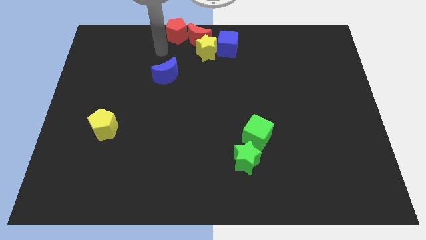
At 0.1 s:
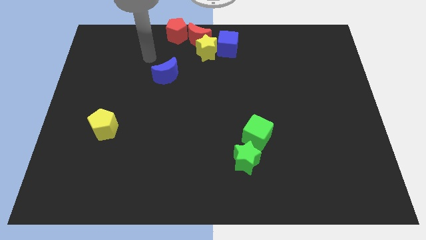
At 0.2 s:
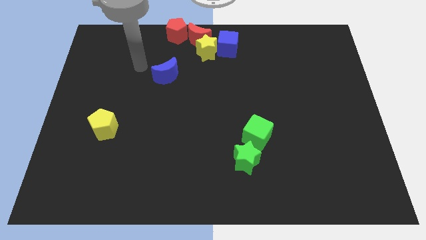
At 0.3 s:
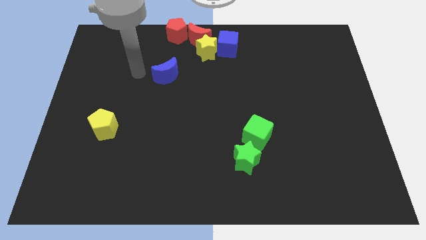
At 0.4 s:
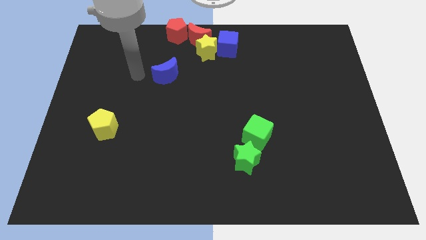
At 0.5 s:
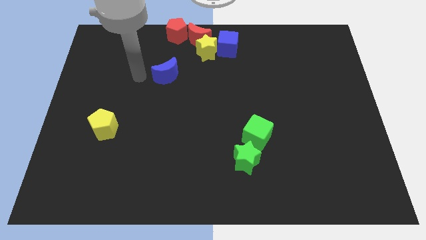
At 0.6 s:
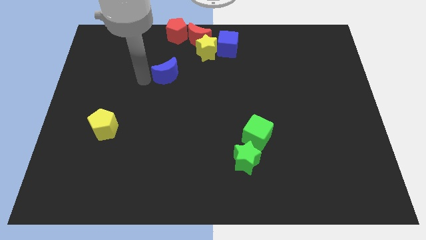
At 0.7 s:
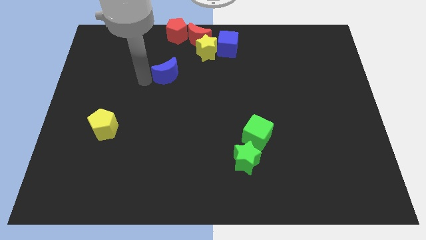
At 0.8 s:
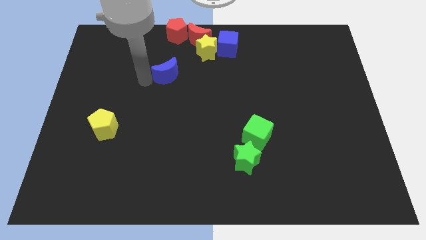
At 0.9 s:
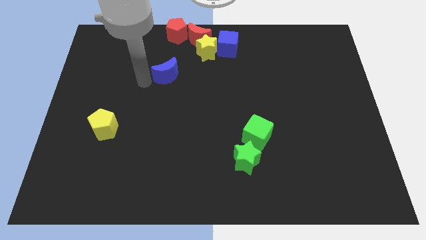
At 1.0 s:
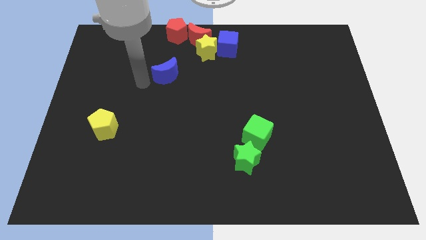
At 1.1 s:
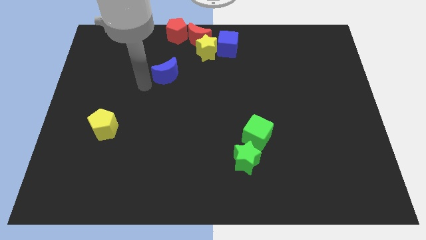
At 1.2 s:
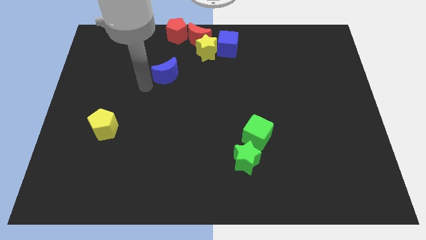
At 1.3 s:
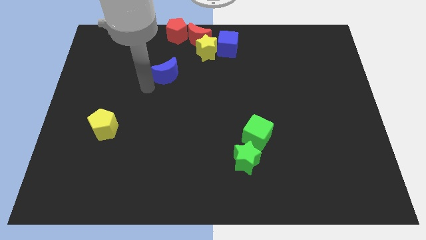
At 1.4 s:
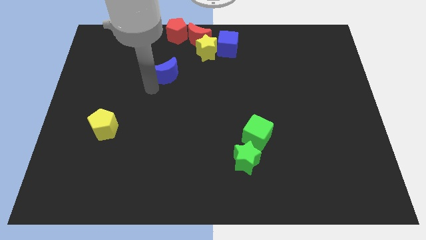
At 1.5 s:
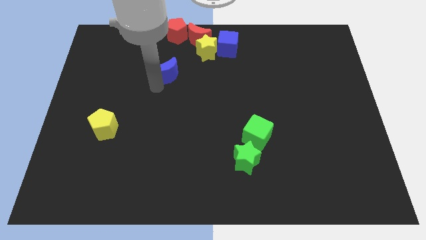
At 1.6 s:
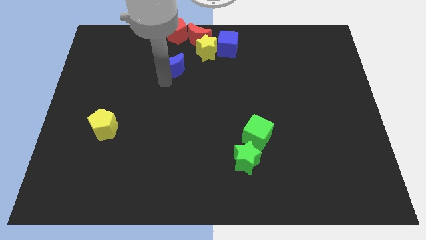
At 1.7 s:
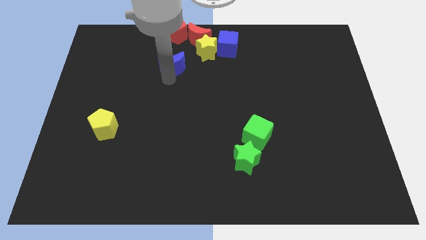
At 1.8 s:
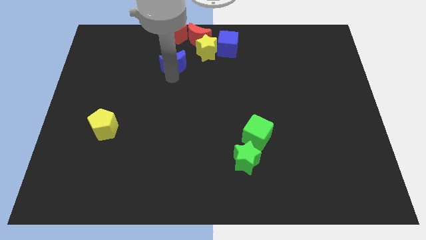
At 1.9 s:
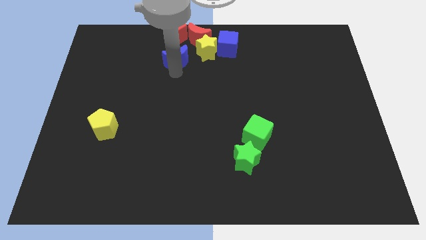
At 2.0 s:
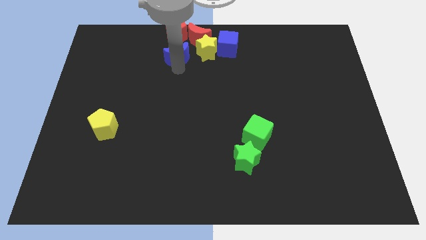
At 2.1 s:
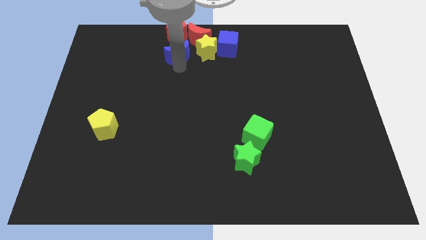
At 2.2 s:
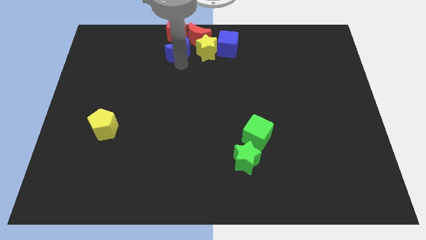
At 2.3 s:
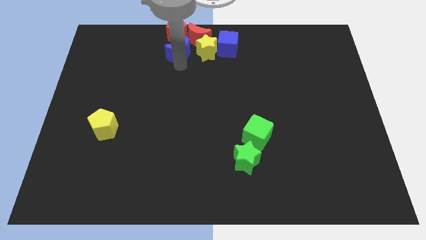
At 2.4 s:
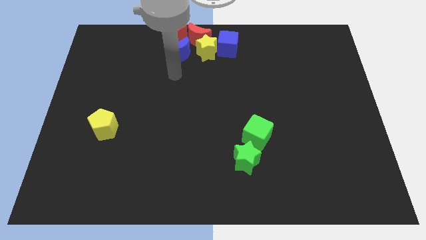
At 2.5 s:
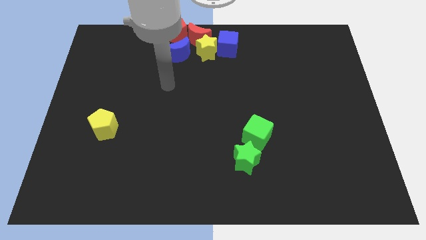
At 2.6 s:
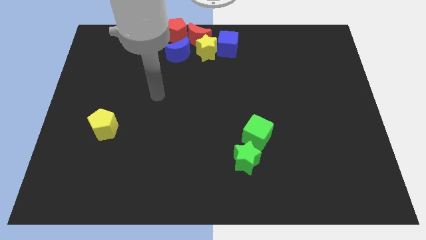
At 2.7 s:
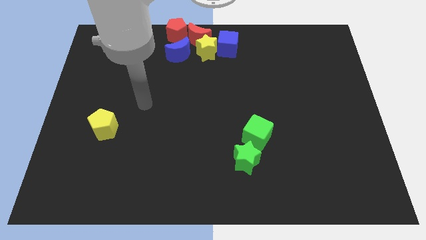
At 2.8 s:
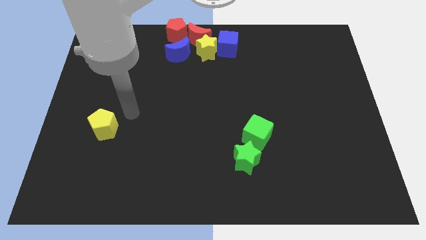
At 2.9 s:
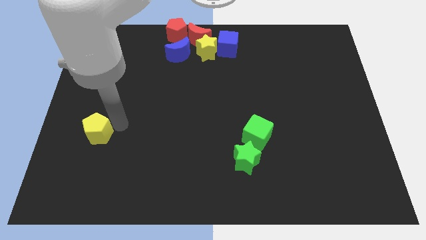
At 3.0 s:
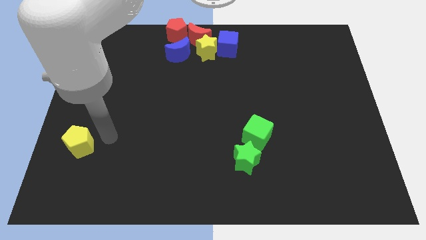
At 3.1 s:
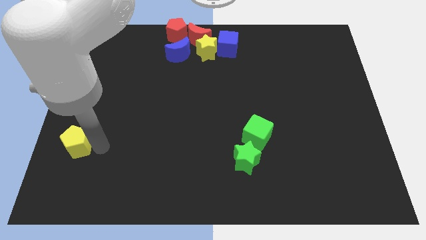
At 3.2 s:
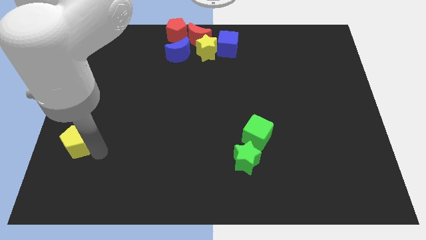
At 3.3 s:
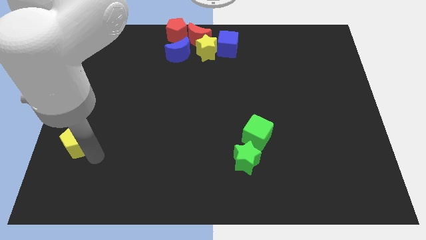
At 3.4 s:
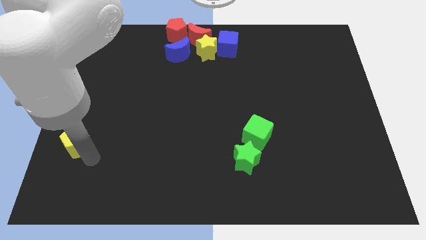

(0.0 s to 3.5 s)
move the yellow star into the red crescent

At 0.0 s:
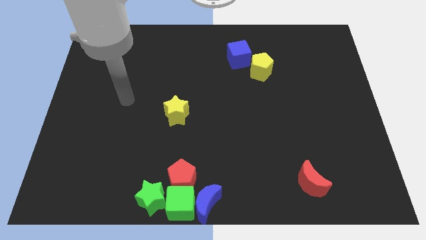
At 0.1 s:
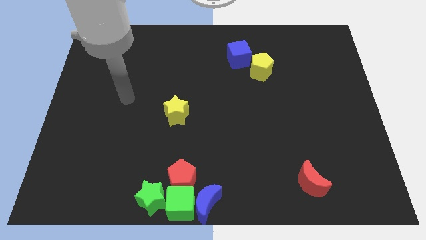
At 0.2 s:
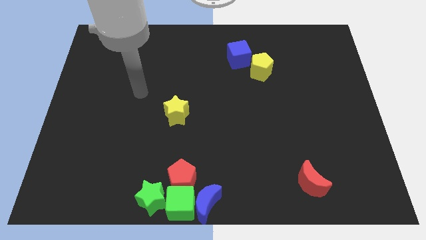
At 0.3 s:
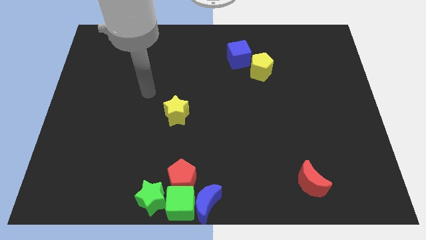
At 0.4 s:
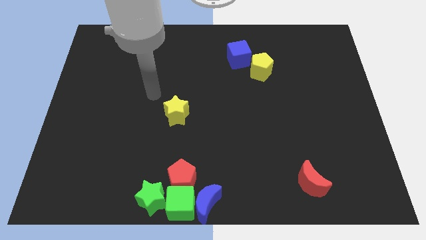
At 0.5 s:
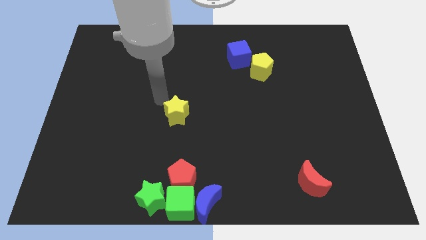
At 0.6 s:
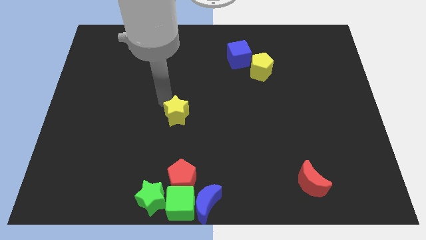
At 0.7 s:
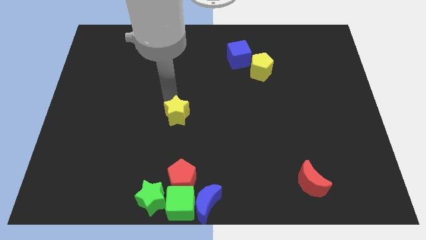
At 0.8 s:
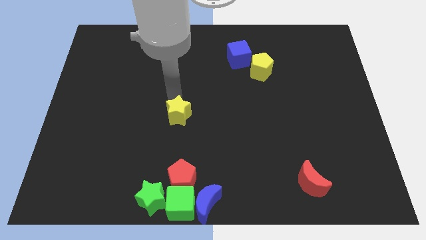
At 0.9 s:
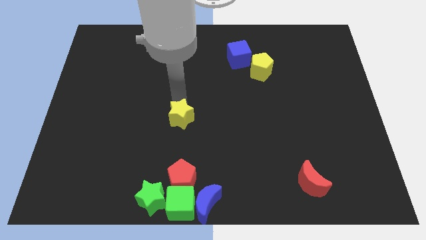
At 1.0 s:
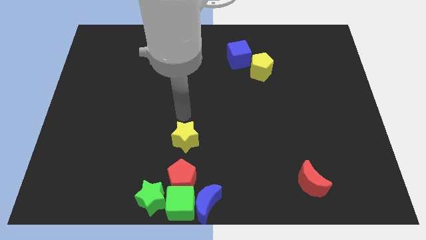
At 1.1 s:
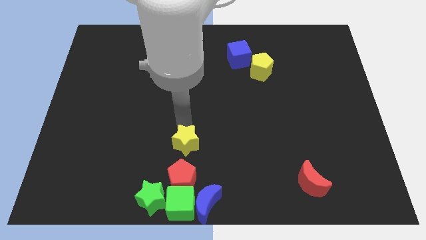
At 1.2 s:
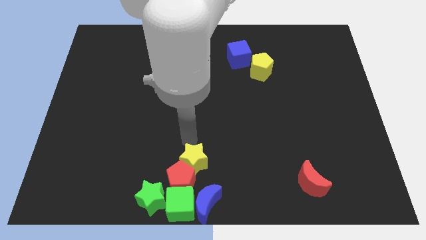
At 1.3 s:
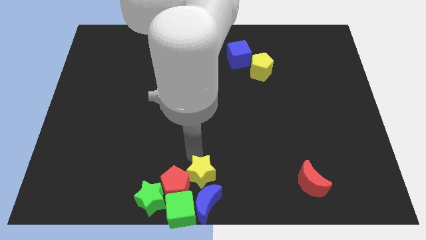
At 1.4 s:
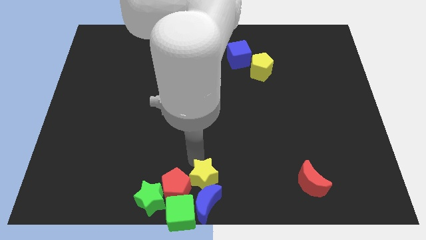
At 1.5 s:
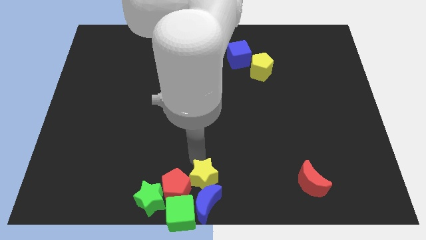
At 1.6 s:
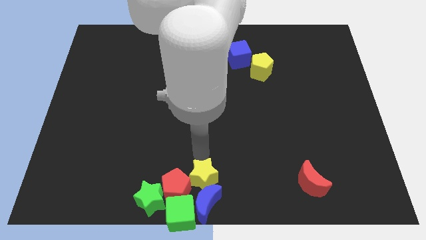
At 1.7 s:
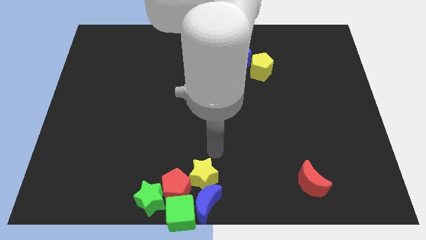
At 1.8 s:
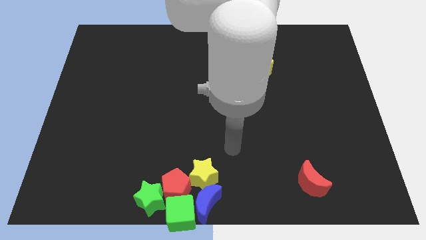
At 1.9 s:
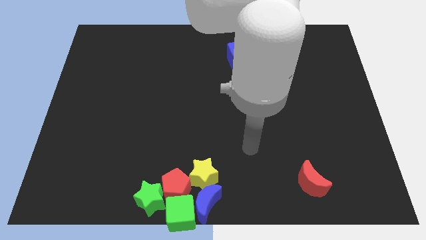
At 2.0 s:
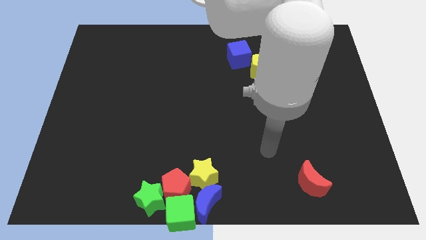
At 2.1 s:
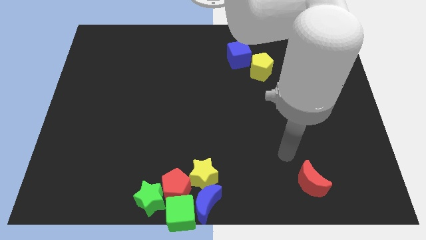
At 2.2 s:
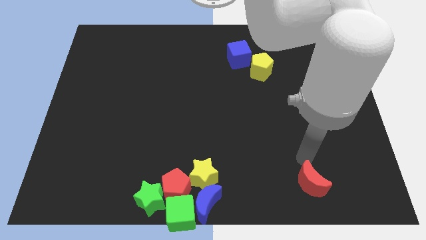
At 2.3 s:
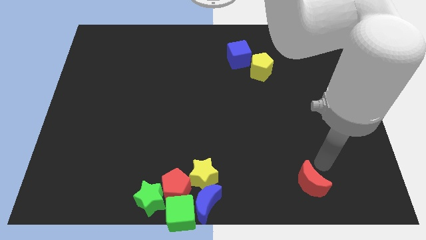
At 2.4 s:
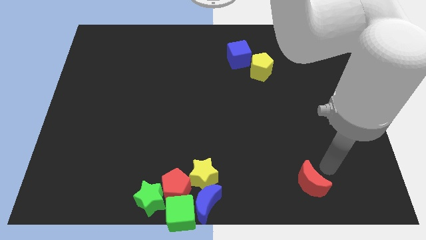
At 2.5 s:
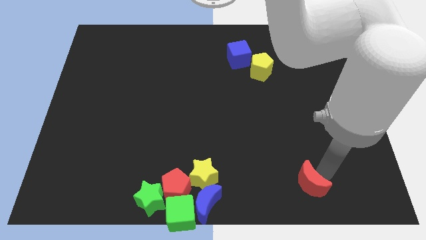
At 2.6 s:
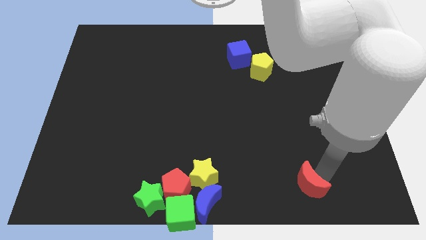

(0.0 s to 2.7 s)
place the arm right to the red moon

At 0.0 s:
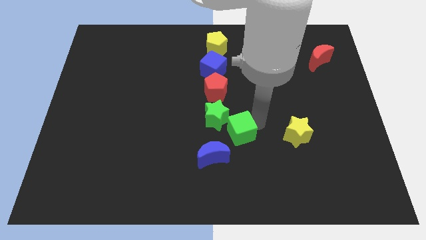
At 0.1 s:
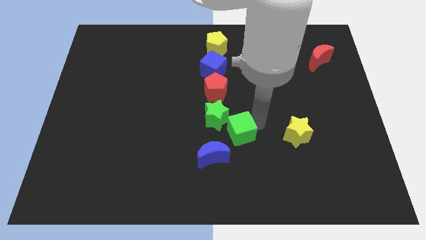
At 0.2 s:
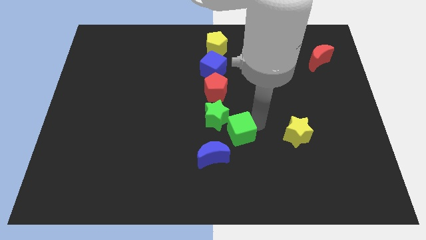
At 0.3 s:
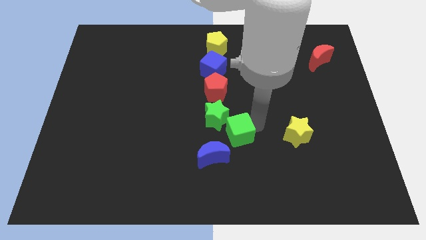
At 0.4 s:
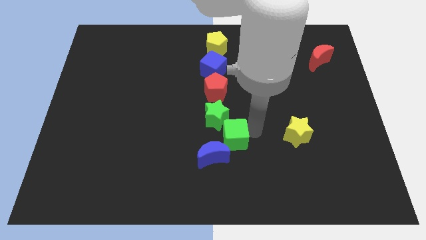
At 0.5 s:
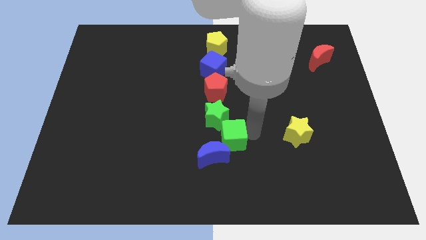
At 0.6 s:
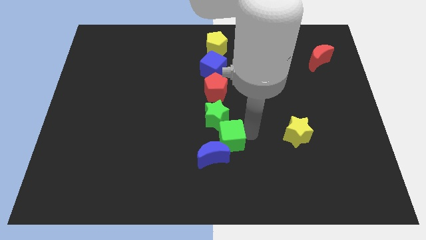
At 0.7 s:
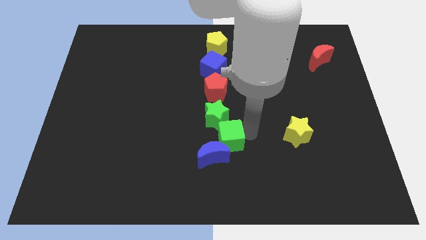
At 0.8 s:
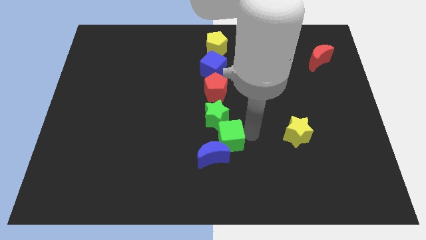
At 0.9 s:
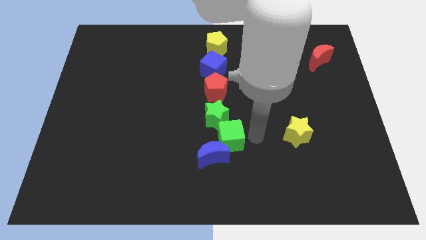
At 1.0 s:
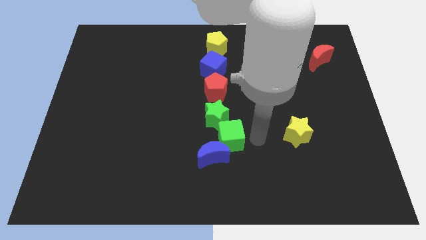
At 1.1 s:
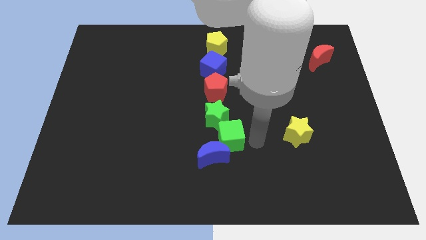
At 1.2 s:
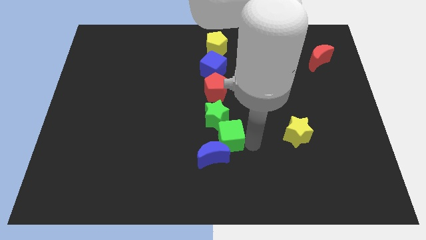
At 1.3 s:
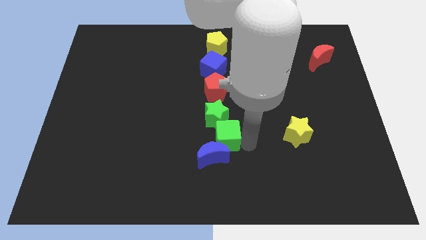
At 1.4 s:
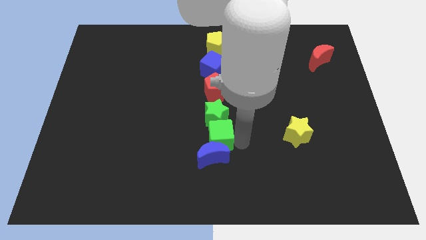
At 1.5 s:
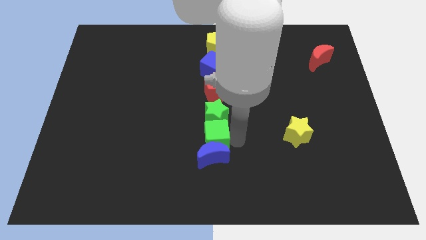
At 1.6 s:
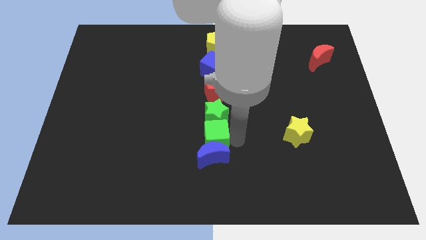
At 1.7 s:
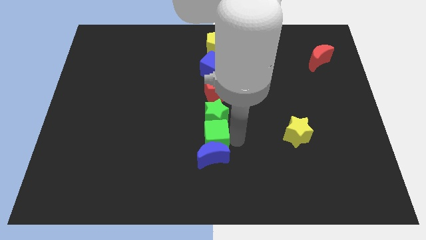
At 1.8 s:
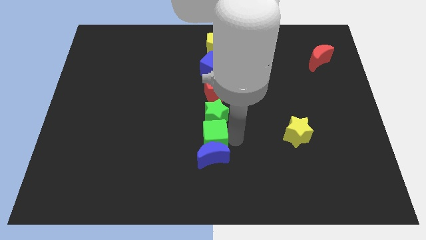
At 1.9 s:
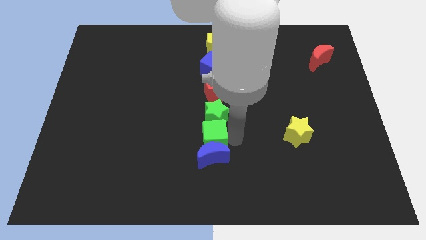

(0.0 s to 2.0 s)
place the green cube in between the green star and blue crescent

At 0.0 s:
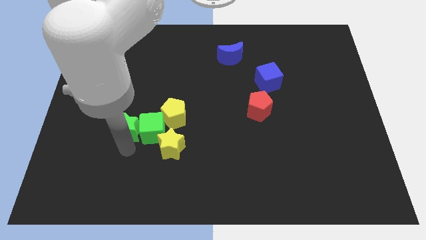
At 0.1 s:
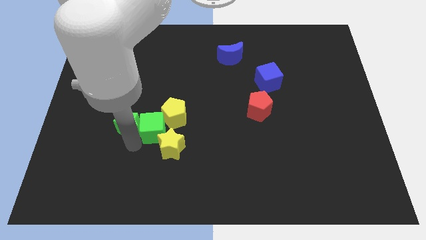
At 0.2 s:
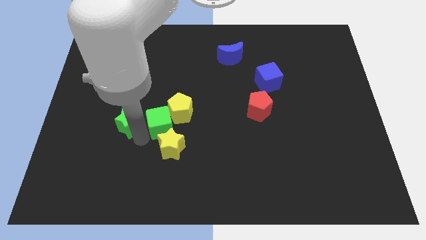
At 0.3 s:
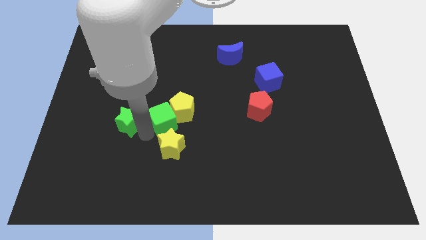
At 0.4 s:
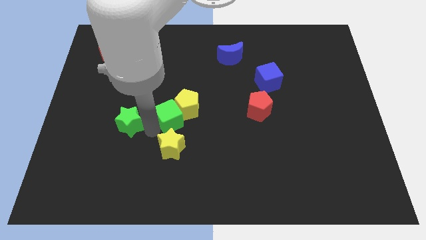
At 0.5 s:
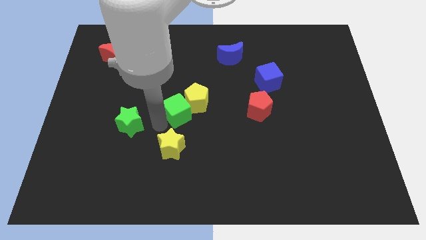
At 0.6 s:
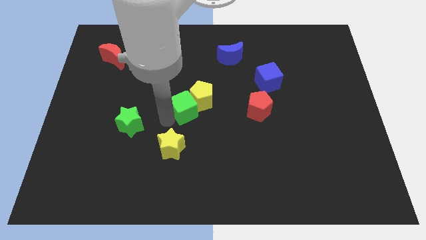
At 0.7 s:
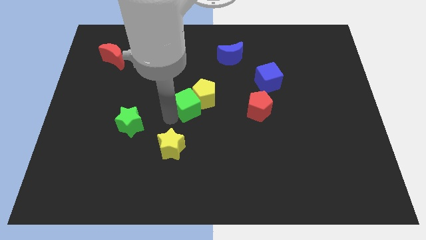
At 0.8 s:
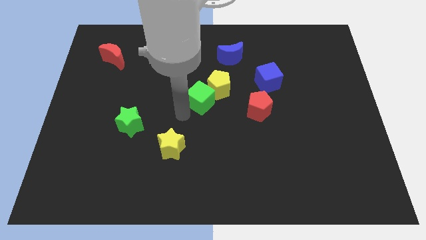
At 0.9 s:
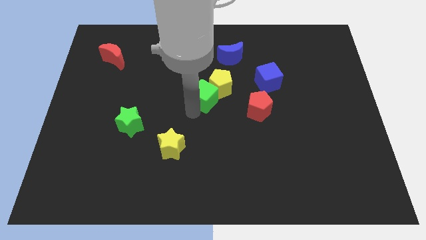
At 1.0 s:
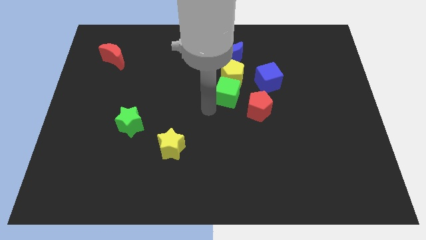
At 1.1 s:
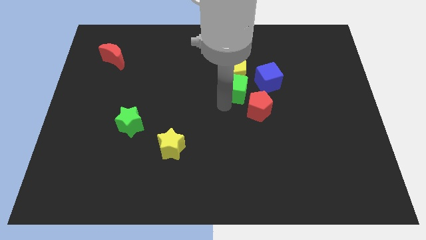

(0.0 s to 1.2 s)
push green cube into yellow pentagon
